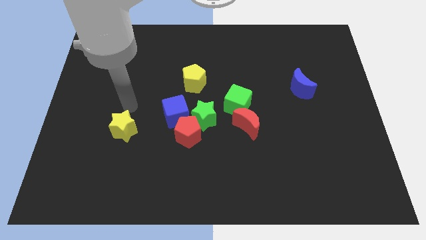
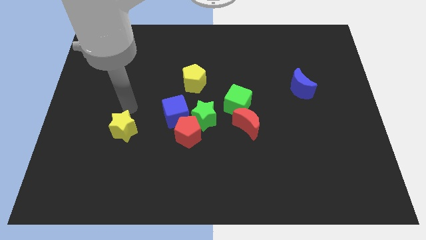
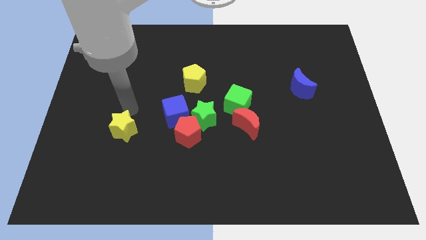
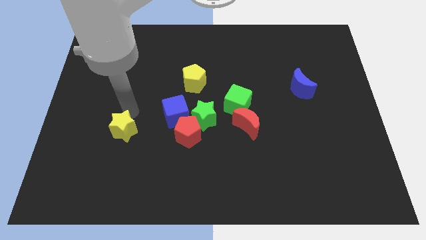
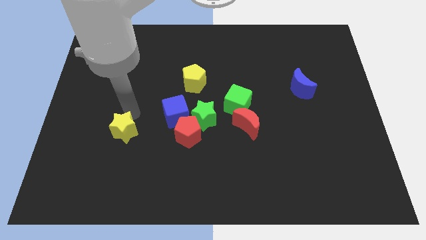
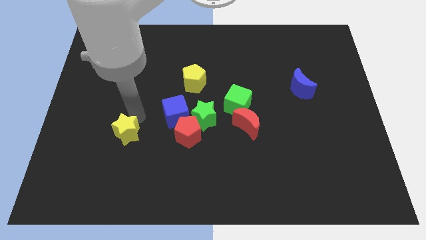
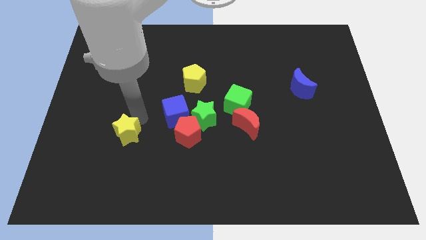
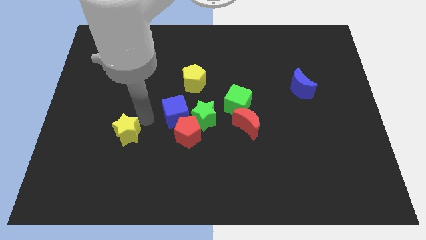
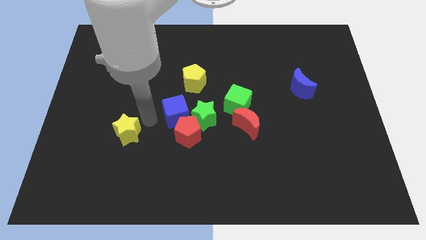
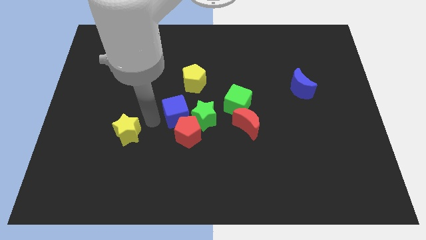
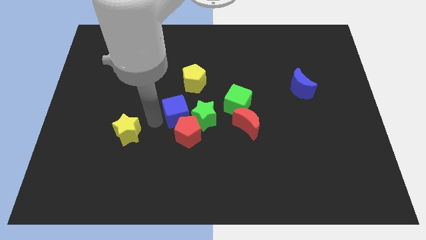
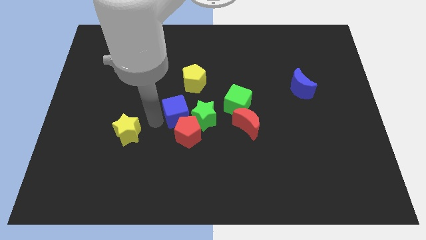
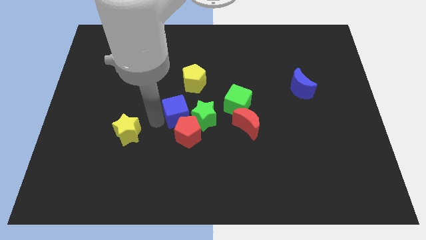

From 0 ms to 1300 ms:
move the yellow star slightly right side

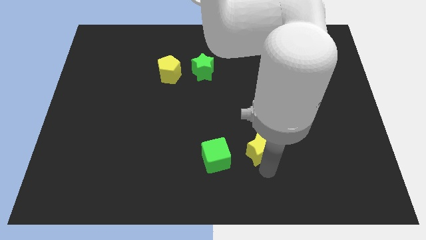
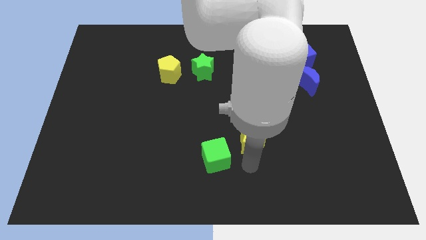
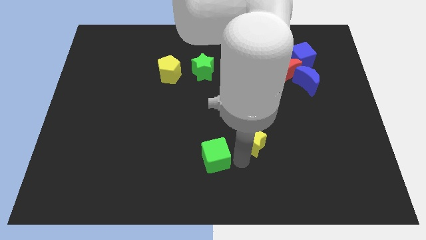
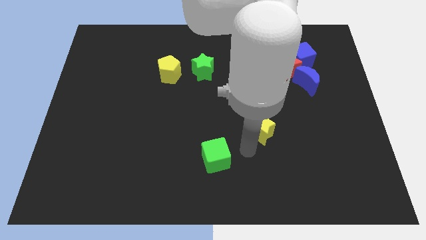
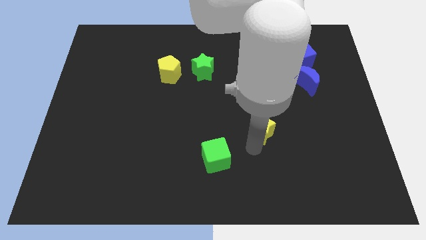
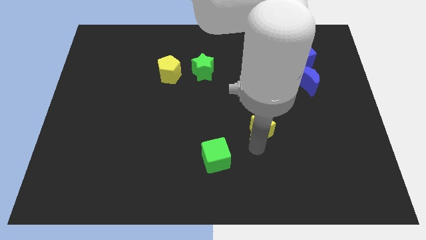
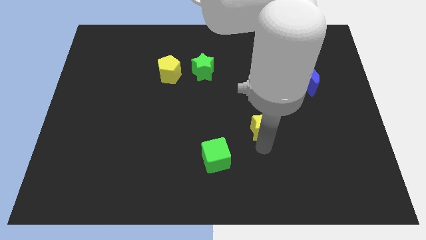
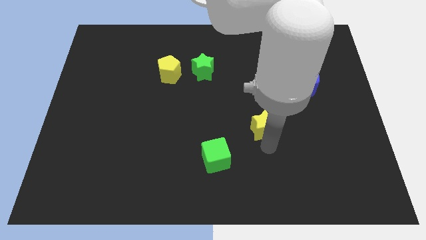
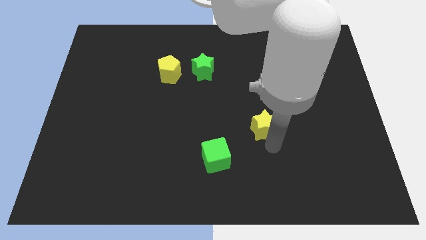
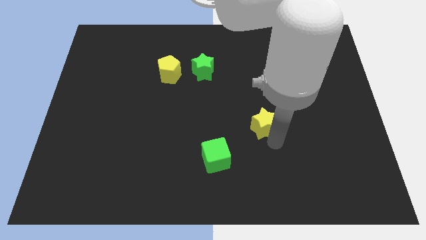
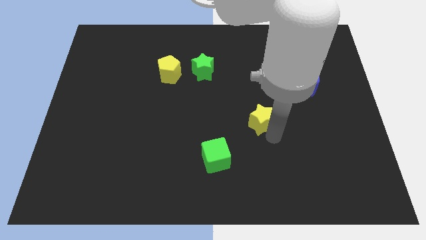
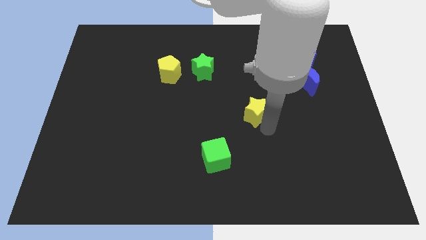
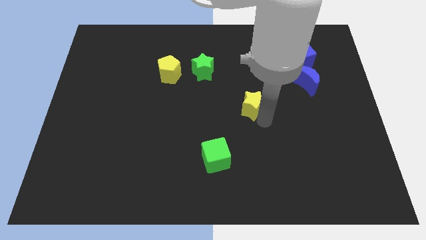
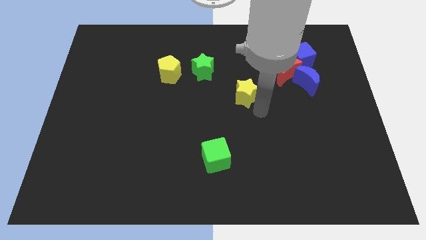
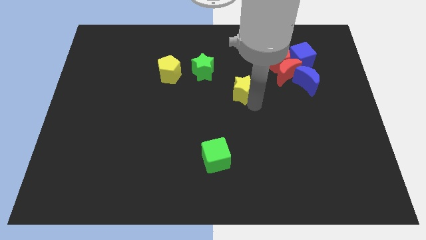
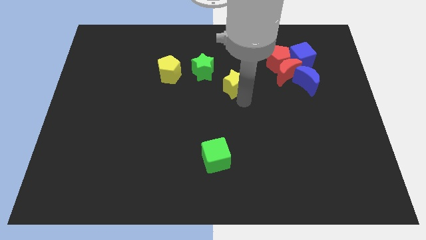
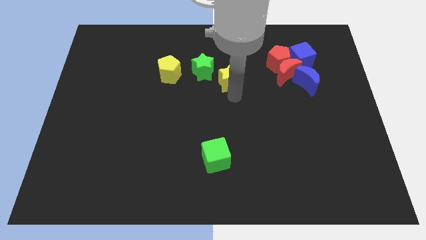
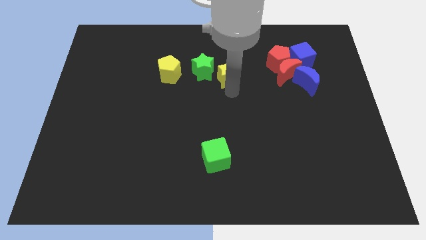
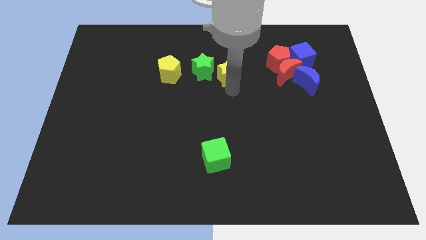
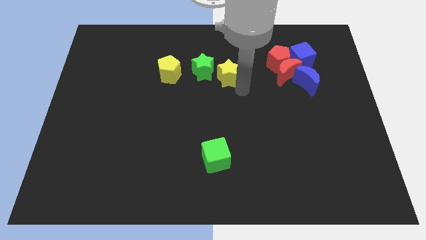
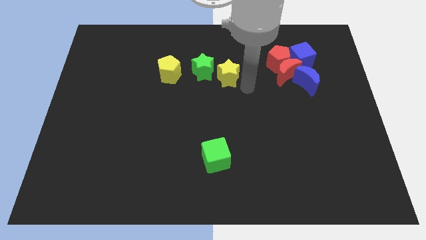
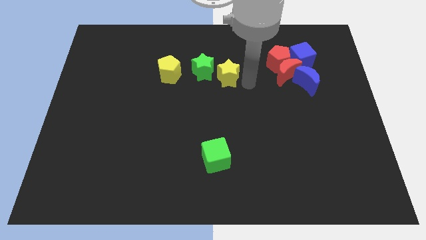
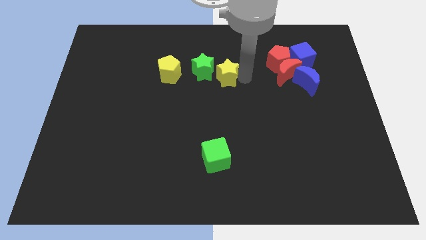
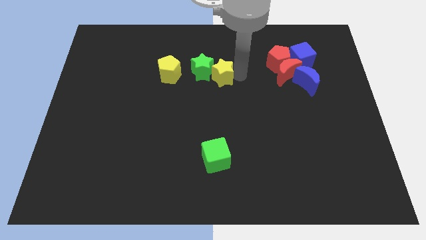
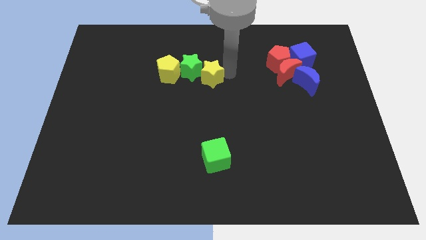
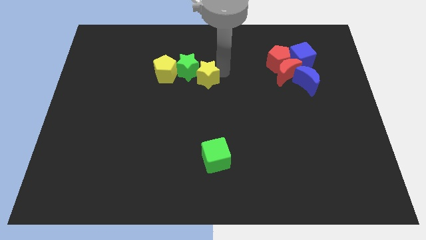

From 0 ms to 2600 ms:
push yellow star into green cube

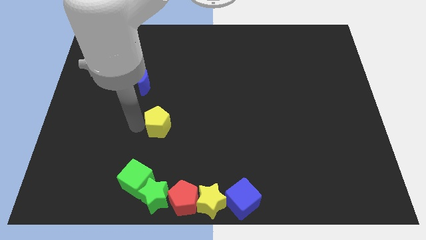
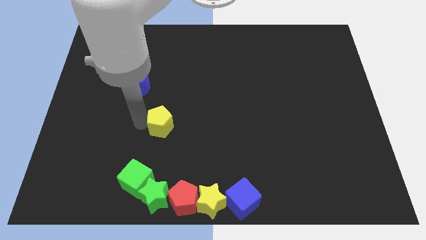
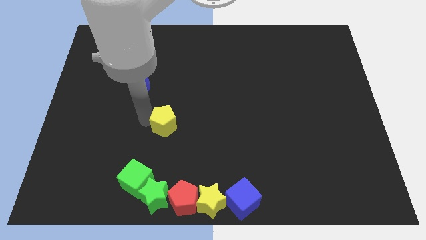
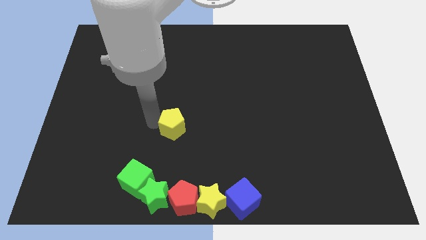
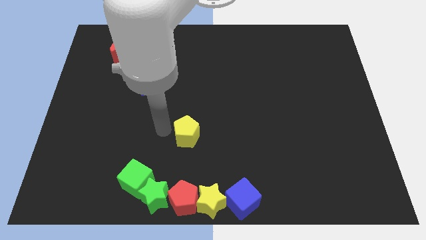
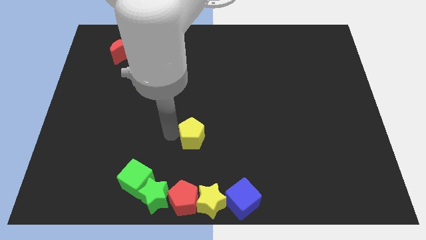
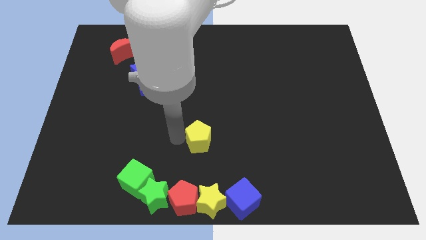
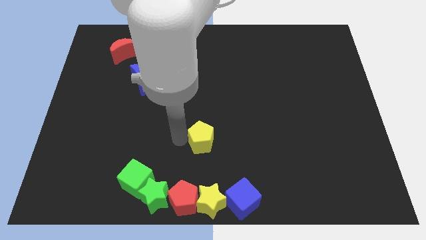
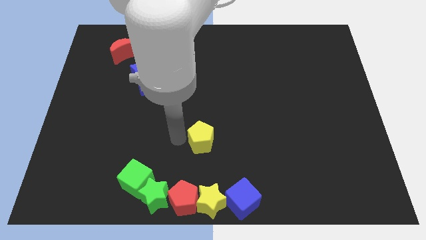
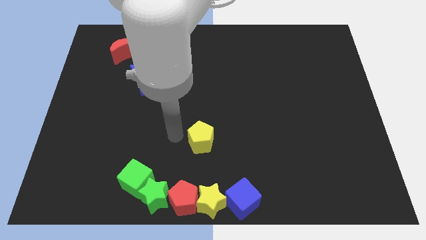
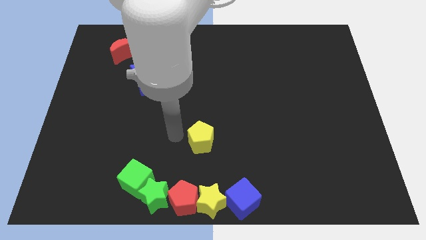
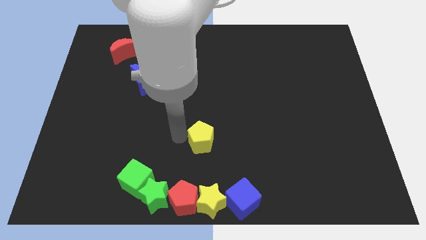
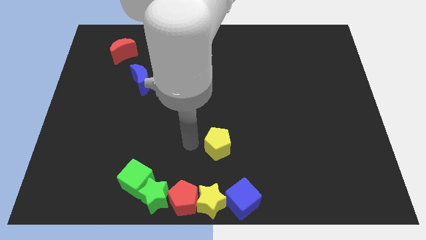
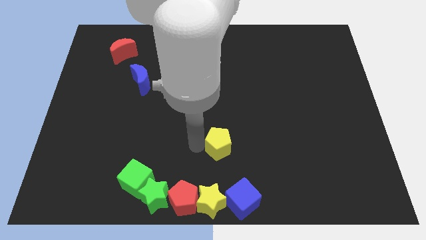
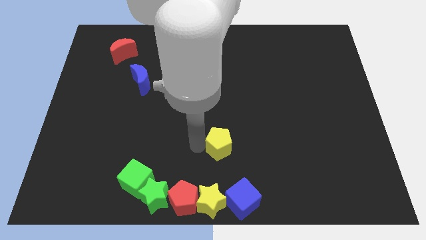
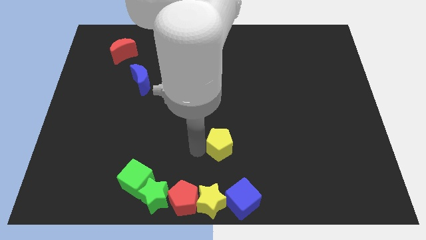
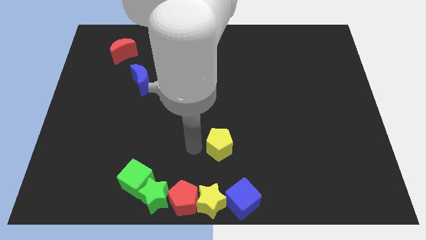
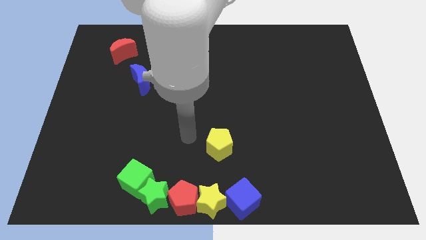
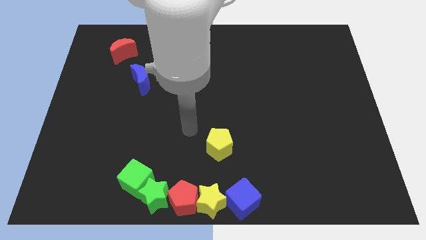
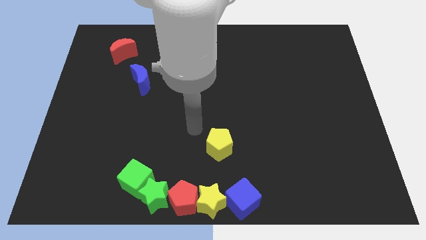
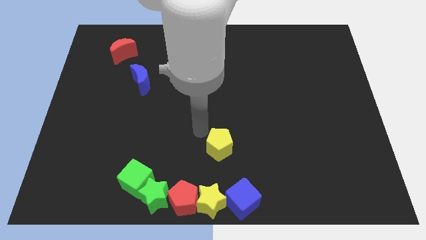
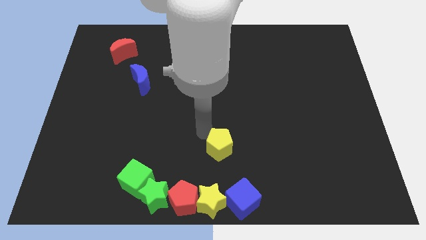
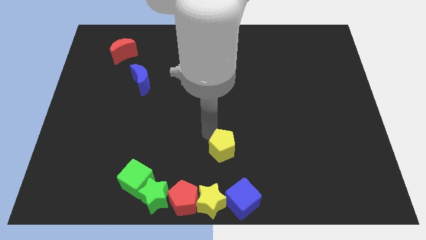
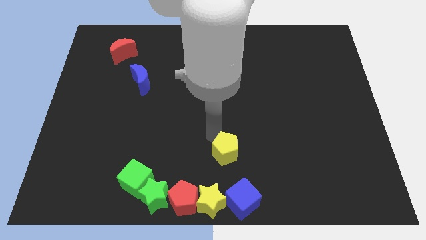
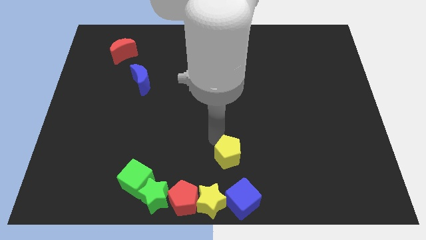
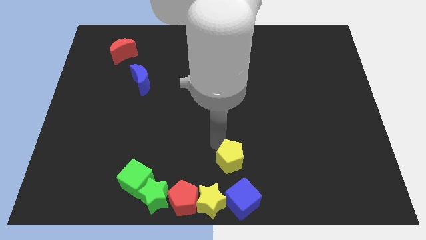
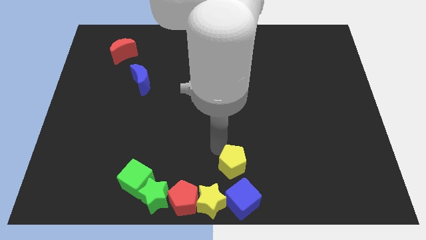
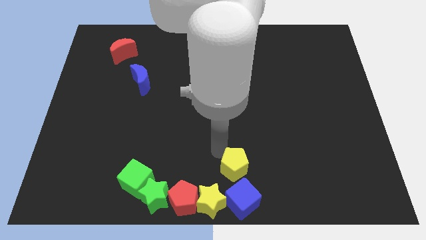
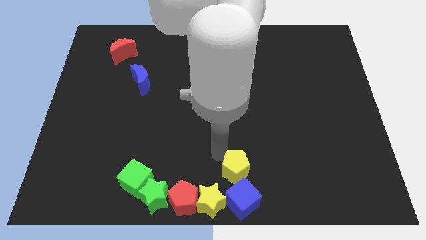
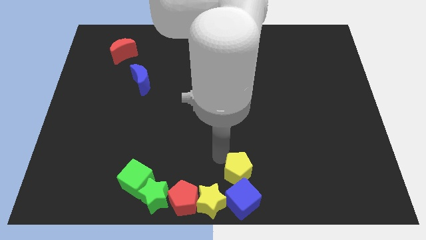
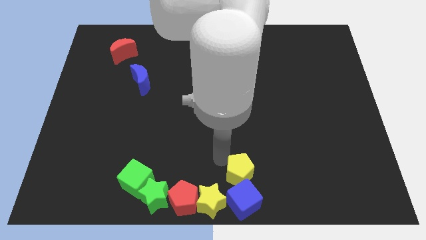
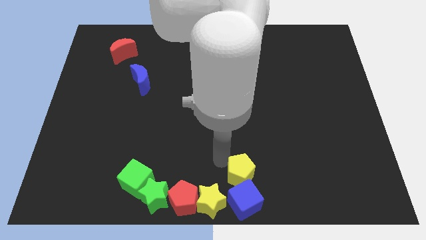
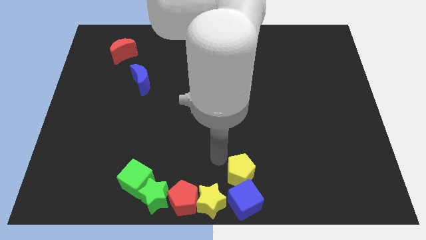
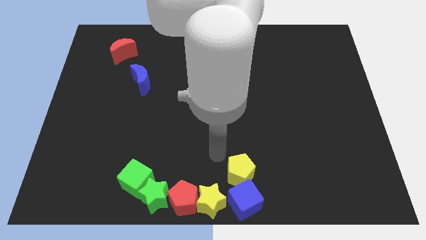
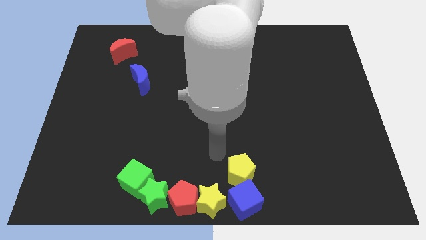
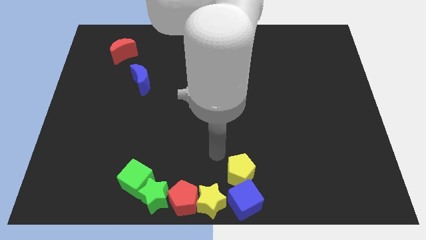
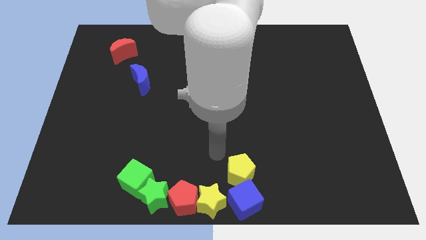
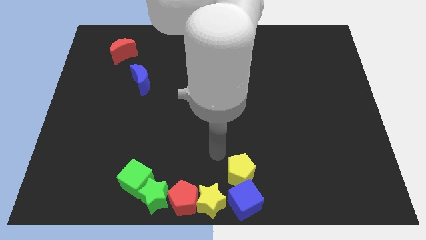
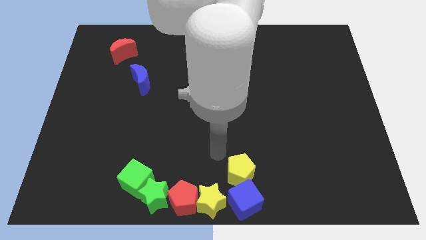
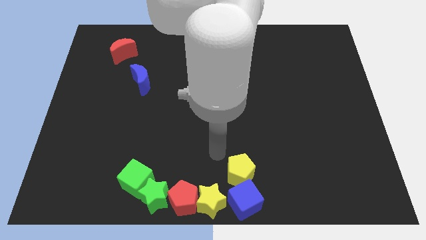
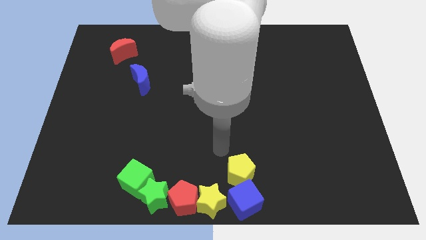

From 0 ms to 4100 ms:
push the yellow pentagon into the blue cube

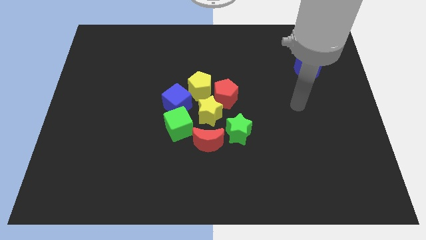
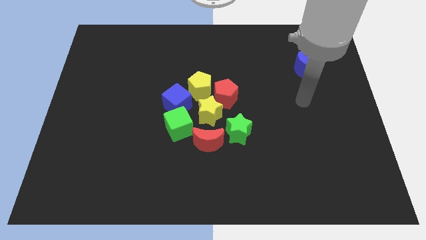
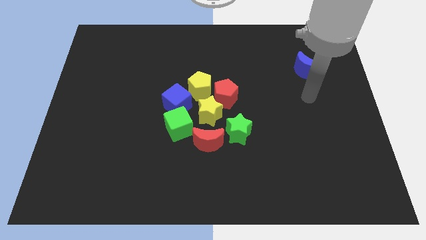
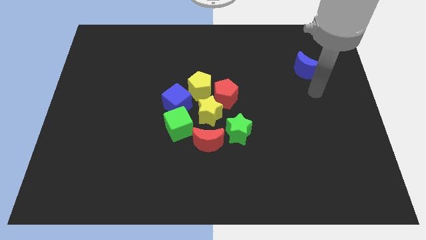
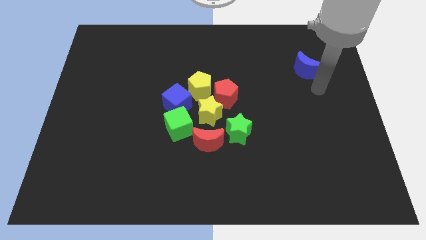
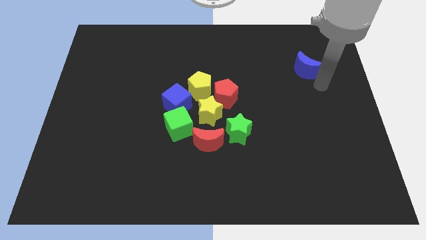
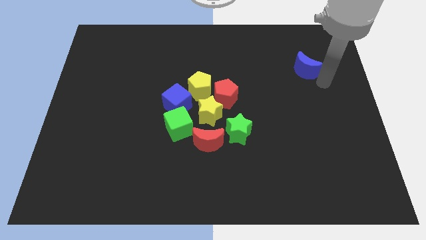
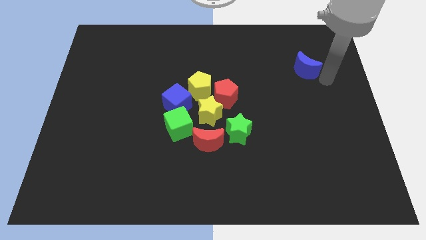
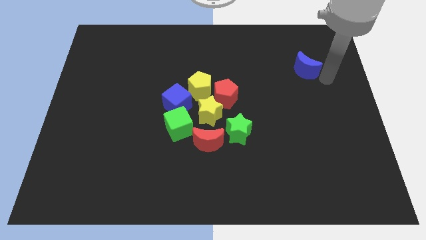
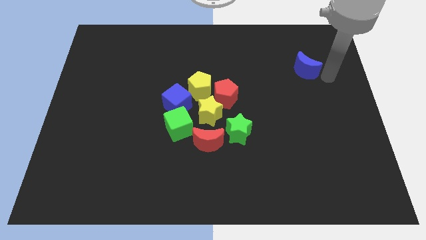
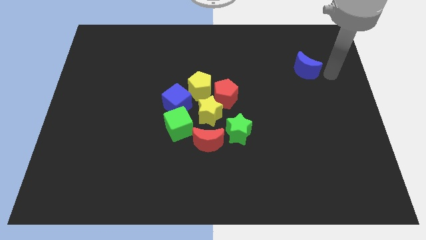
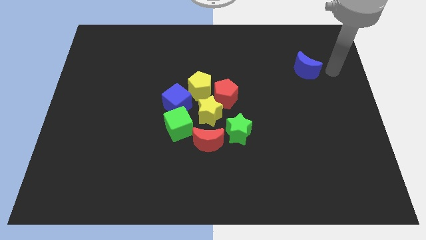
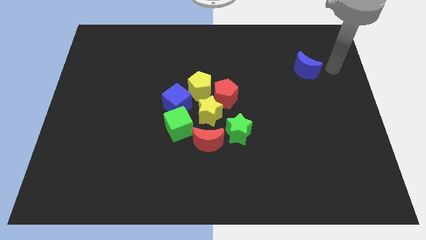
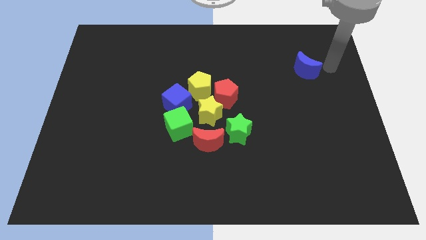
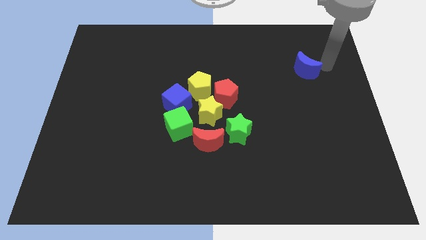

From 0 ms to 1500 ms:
move your arm towards blue crescent
